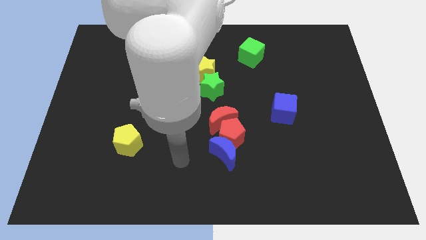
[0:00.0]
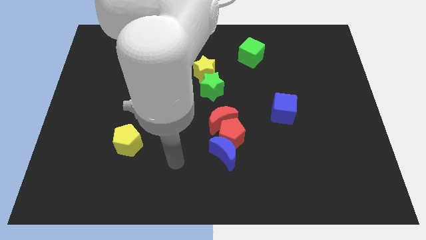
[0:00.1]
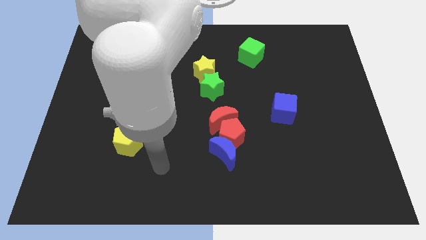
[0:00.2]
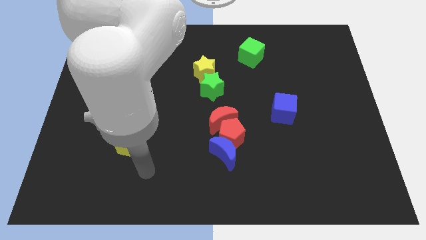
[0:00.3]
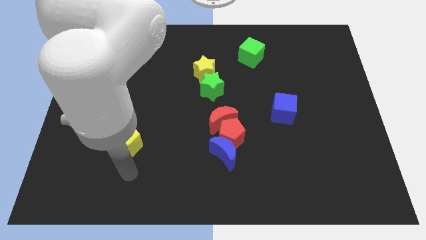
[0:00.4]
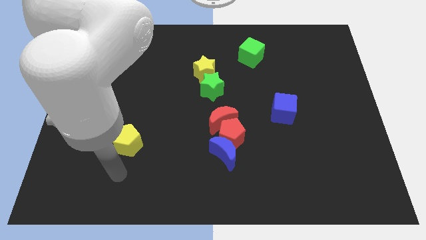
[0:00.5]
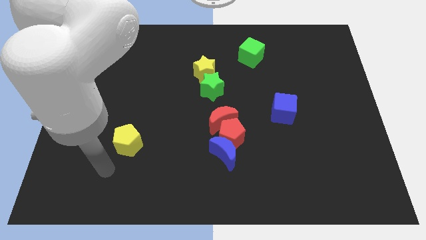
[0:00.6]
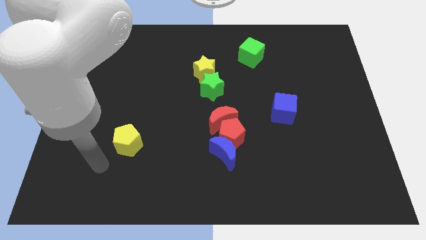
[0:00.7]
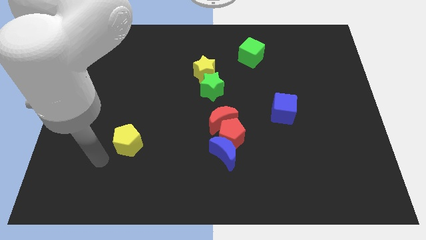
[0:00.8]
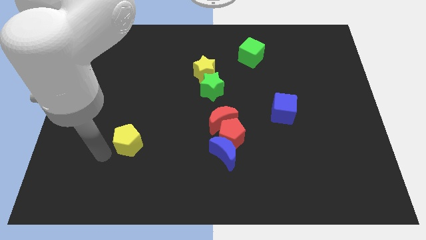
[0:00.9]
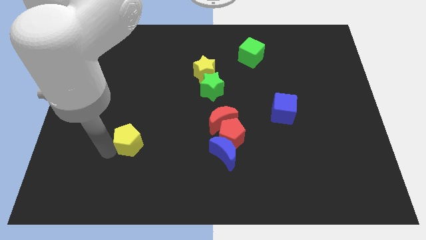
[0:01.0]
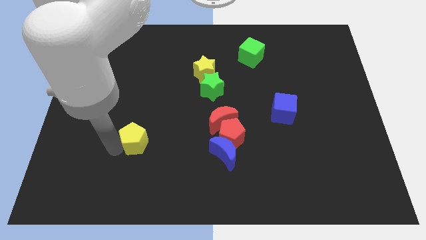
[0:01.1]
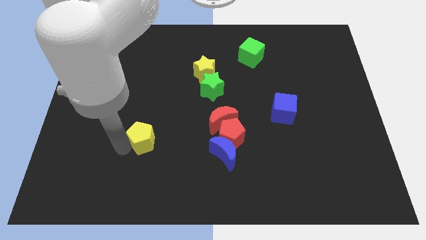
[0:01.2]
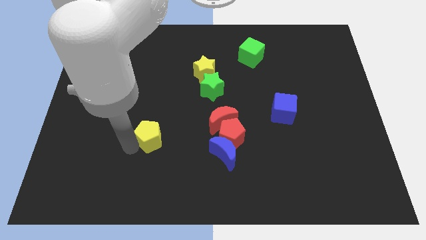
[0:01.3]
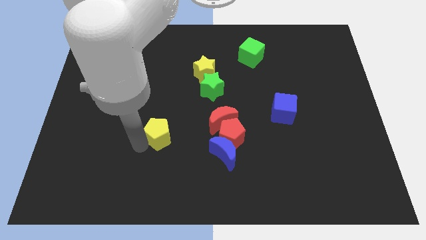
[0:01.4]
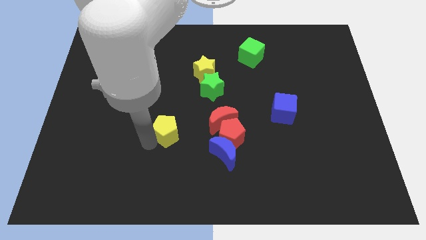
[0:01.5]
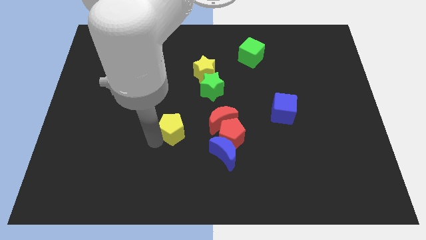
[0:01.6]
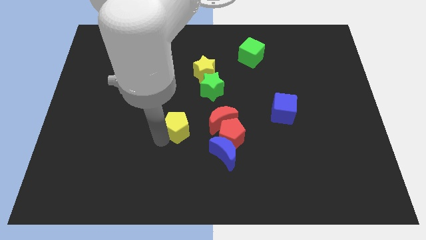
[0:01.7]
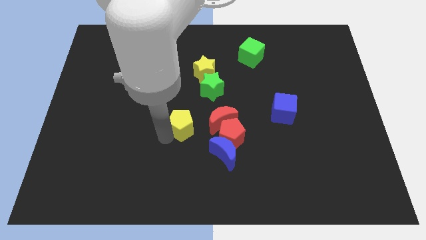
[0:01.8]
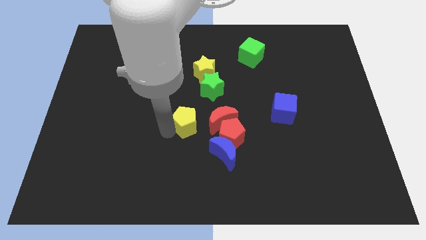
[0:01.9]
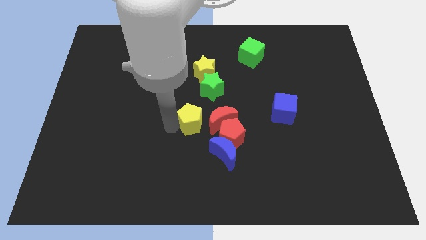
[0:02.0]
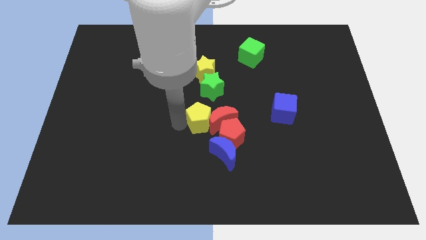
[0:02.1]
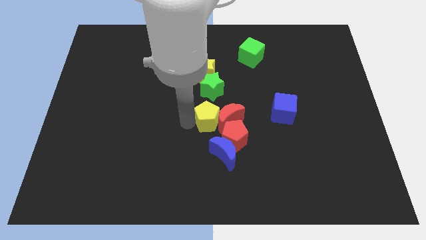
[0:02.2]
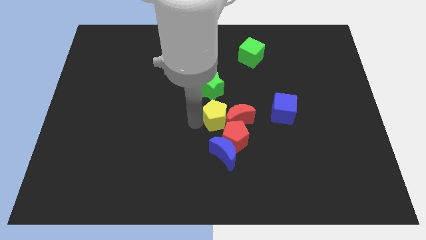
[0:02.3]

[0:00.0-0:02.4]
move the yellow pentagon into the left side of the red crescent

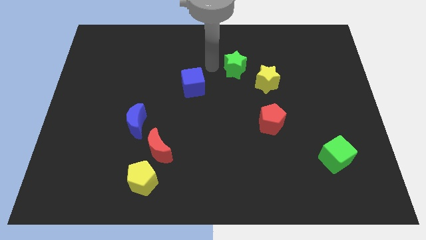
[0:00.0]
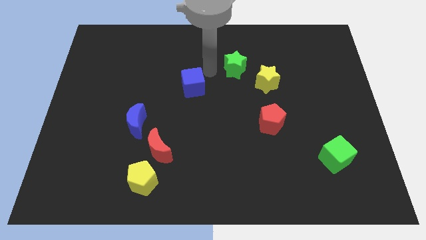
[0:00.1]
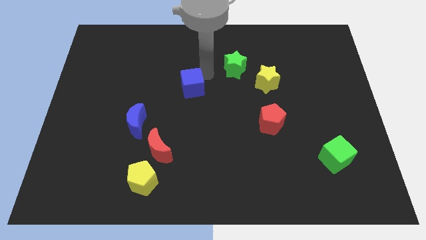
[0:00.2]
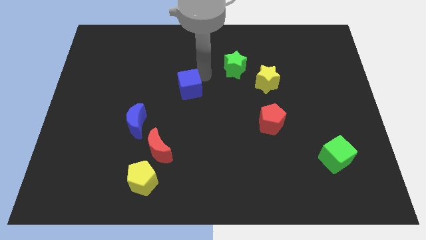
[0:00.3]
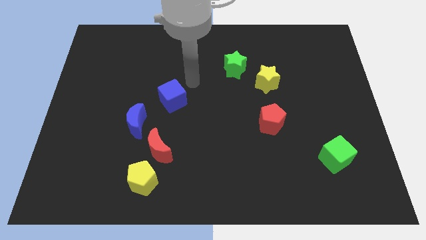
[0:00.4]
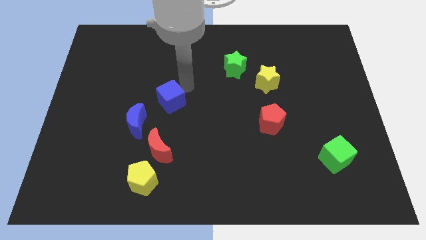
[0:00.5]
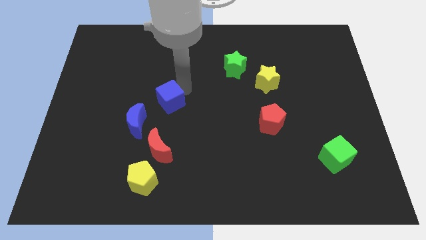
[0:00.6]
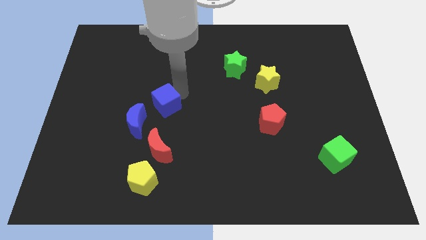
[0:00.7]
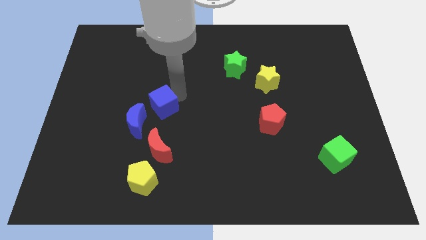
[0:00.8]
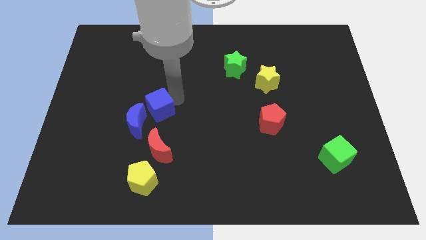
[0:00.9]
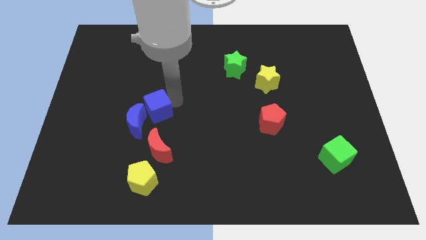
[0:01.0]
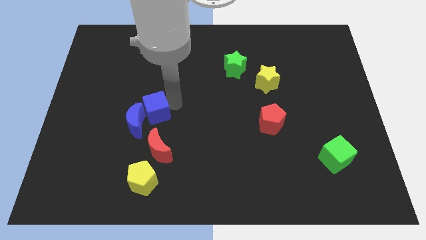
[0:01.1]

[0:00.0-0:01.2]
push the blue cube into the blue moon

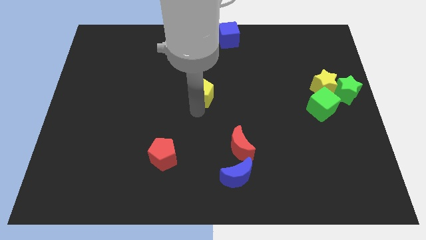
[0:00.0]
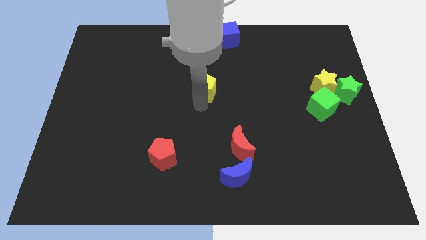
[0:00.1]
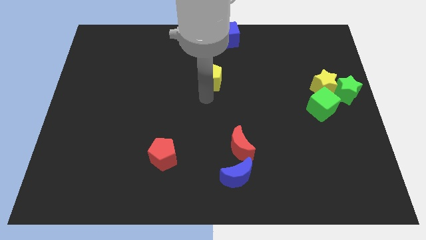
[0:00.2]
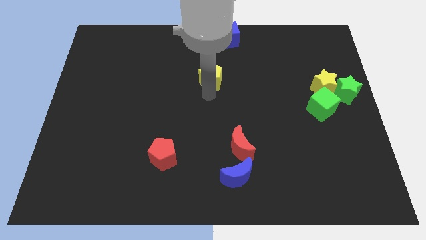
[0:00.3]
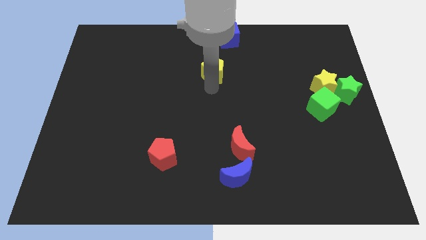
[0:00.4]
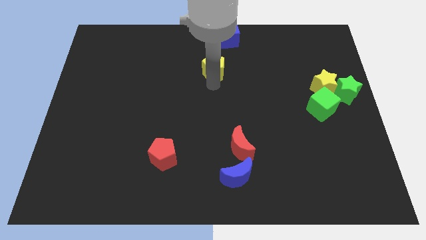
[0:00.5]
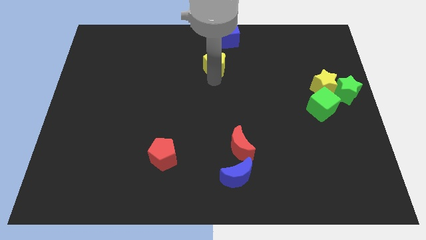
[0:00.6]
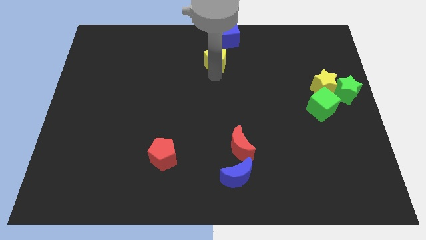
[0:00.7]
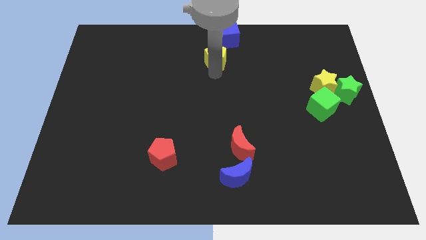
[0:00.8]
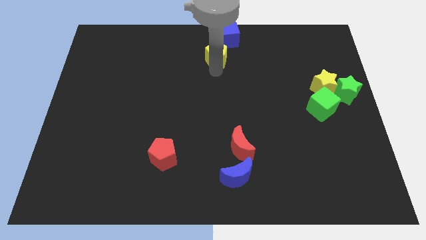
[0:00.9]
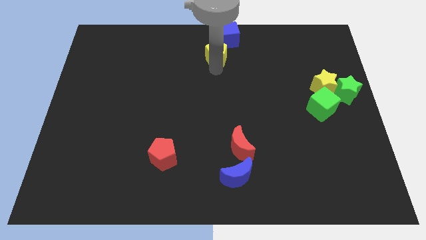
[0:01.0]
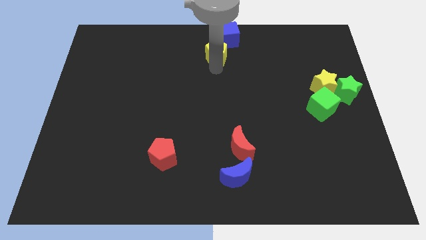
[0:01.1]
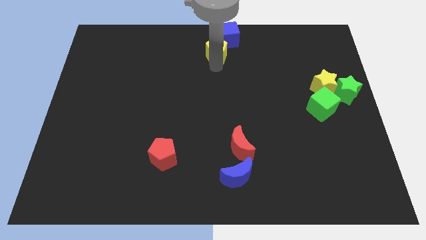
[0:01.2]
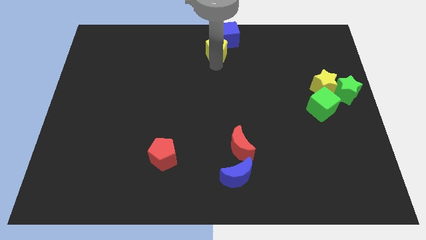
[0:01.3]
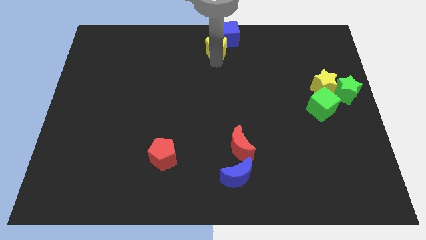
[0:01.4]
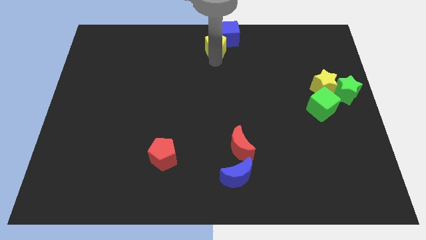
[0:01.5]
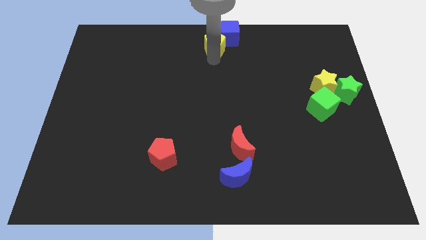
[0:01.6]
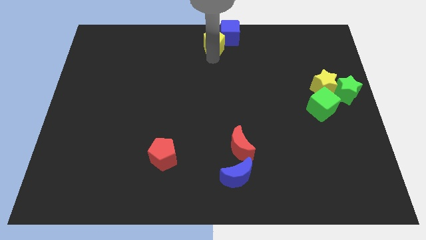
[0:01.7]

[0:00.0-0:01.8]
push yellow pentagon into the blue cube

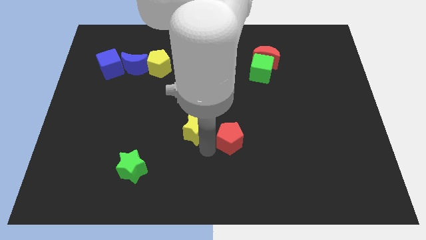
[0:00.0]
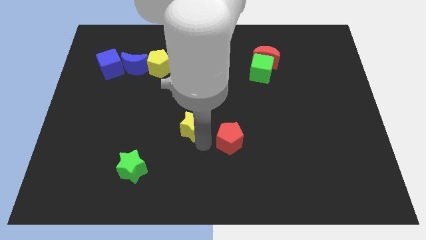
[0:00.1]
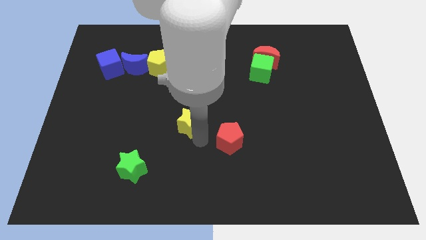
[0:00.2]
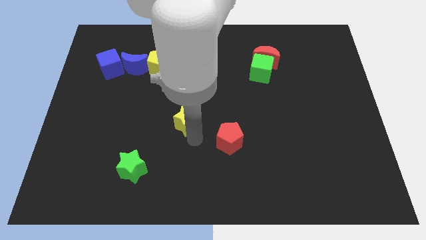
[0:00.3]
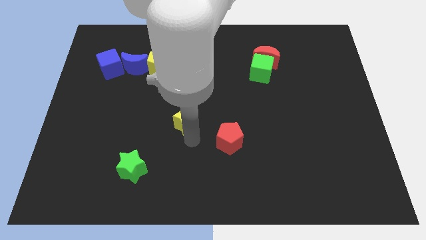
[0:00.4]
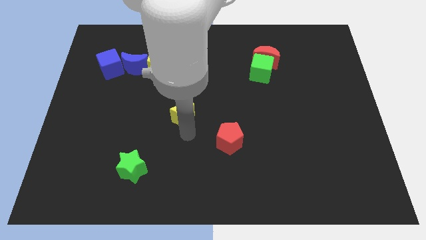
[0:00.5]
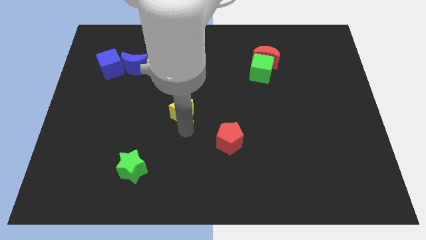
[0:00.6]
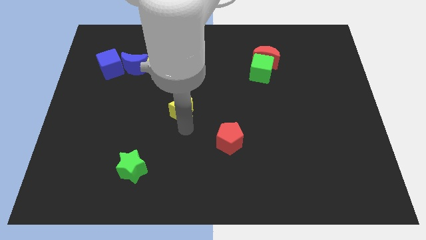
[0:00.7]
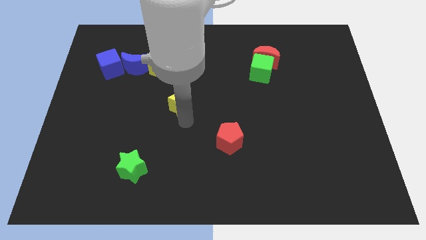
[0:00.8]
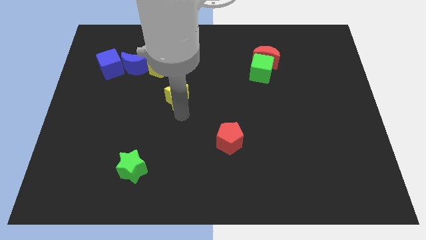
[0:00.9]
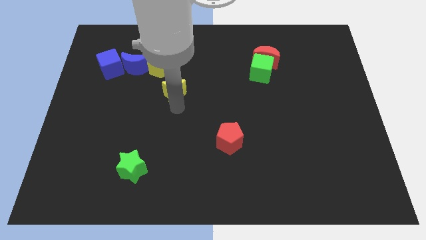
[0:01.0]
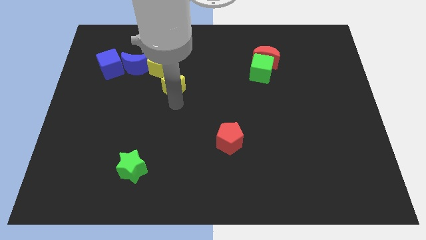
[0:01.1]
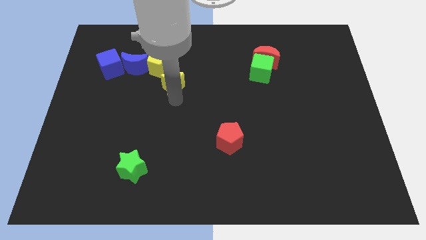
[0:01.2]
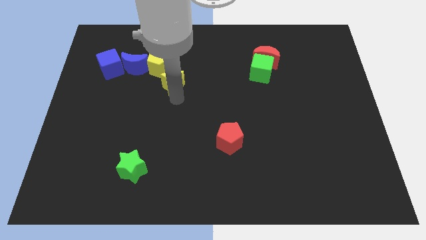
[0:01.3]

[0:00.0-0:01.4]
move the yellow star parallel to the yellow pentagon

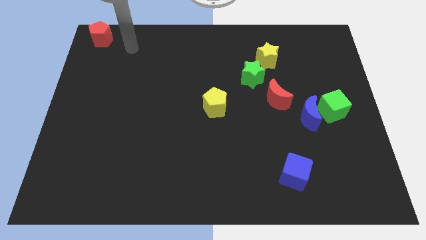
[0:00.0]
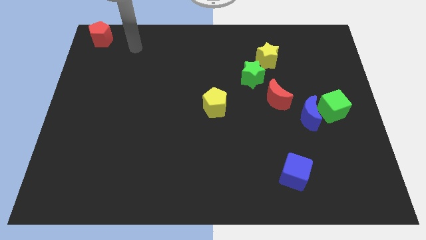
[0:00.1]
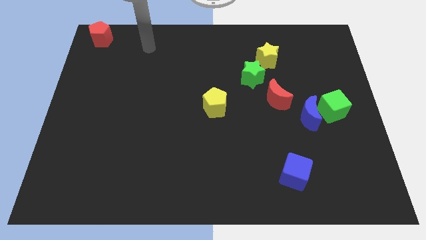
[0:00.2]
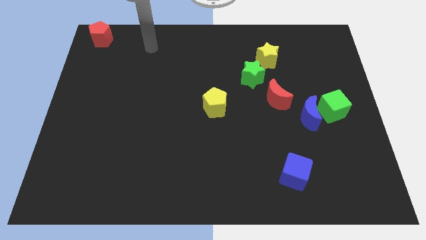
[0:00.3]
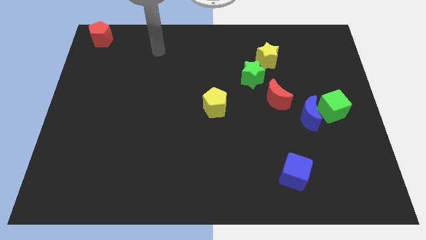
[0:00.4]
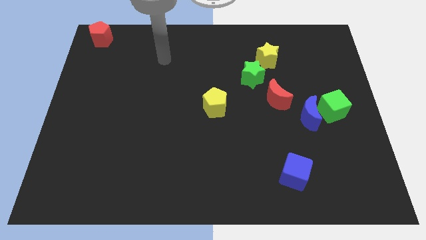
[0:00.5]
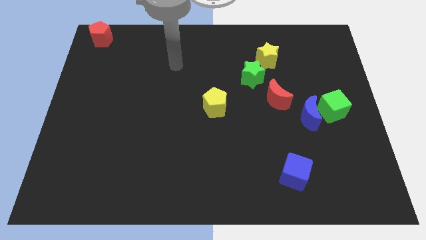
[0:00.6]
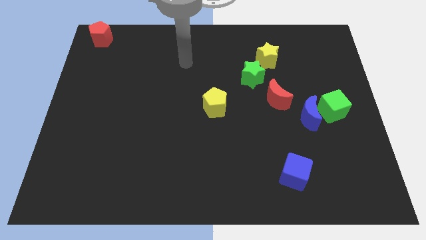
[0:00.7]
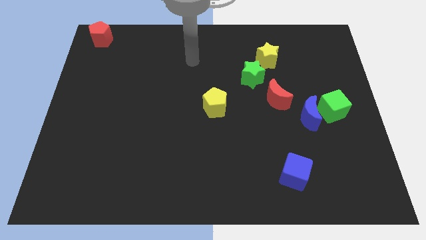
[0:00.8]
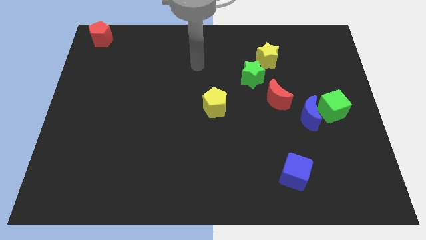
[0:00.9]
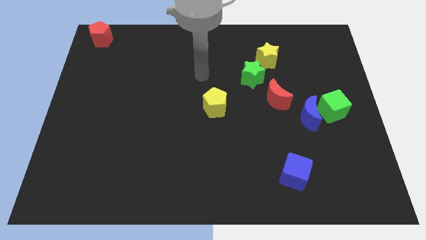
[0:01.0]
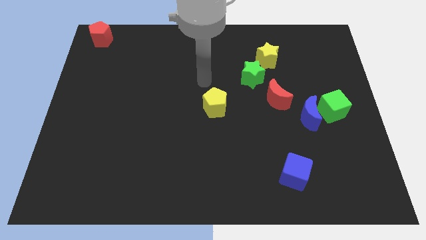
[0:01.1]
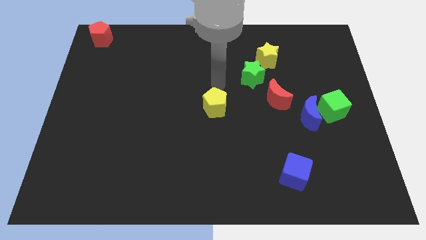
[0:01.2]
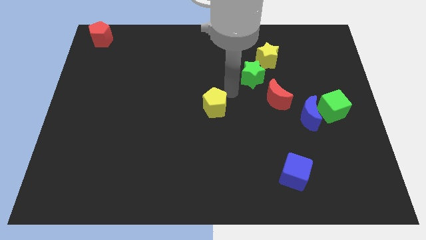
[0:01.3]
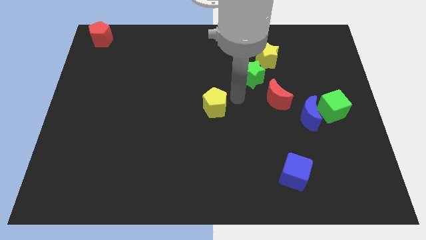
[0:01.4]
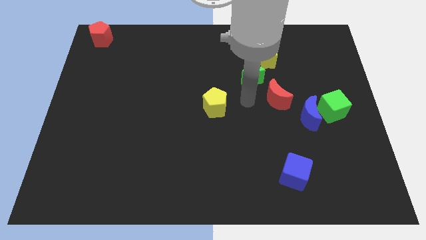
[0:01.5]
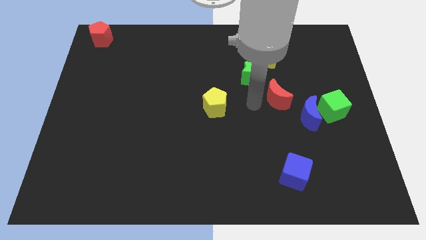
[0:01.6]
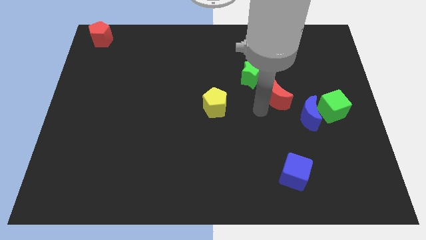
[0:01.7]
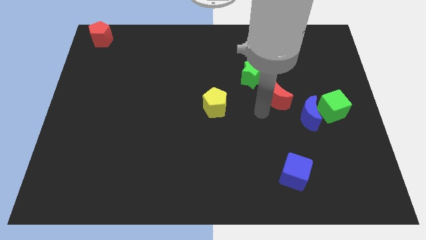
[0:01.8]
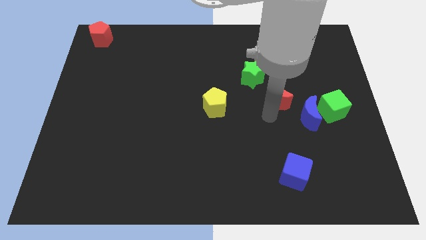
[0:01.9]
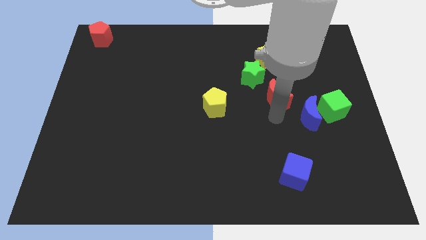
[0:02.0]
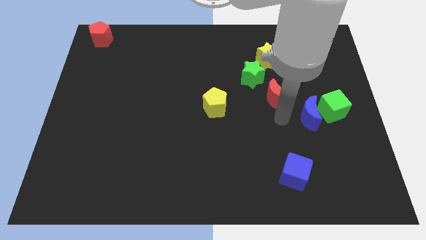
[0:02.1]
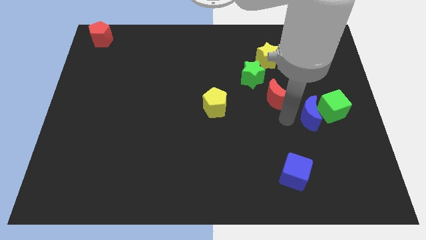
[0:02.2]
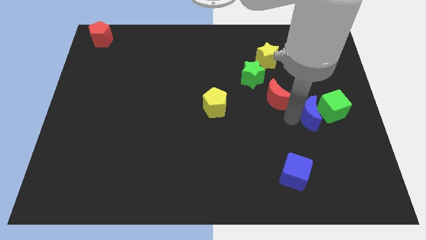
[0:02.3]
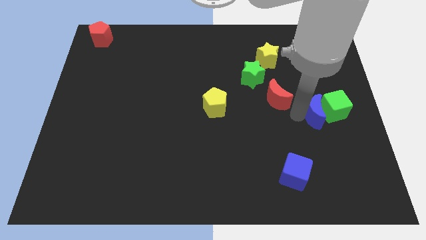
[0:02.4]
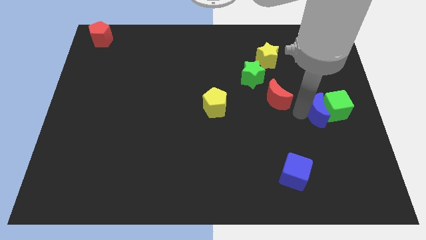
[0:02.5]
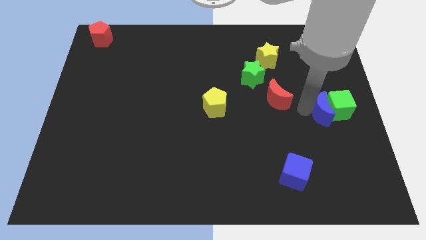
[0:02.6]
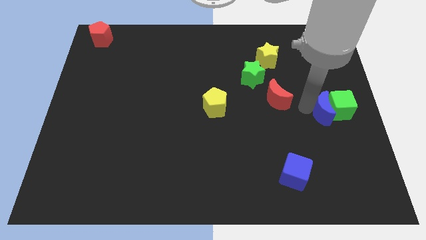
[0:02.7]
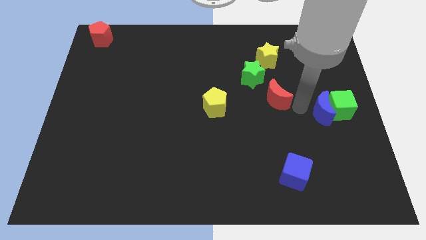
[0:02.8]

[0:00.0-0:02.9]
slide the blue crescent and green cube to right side
